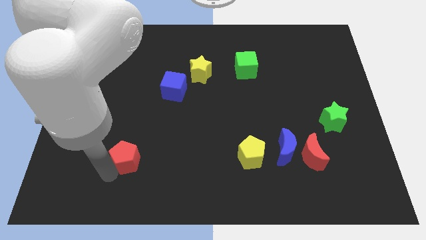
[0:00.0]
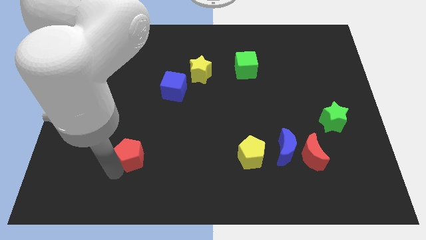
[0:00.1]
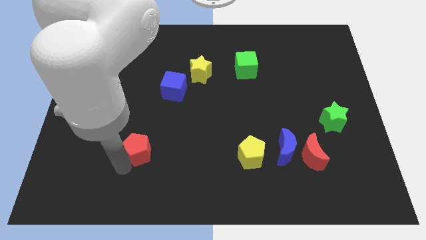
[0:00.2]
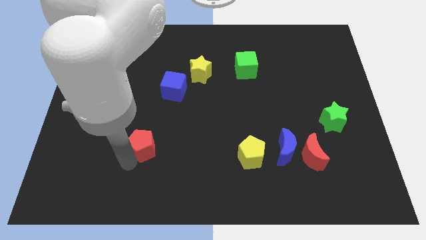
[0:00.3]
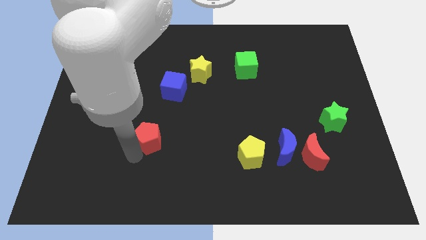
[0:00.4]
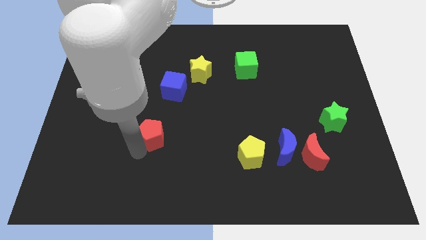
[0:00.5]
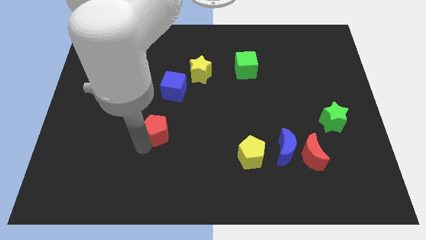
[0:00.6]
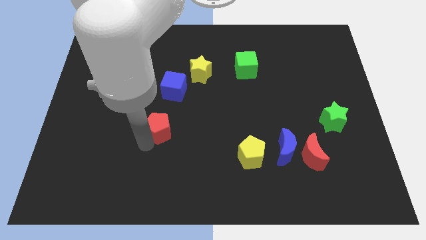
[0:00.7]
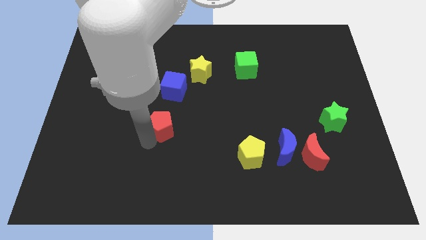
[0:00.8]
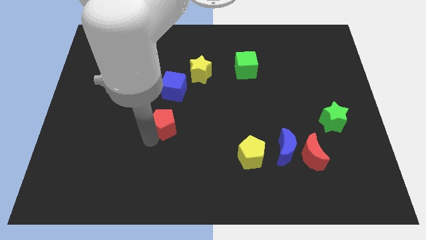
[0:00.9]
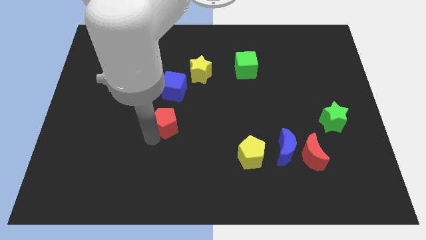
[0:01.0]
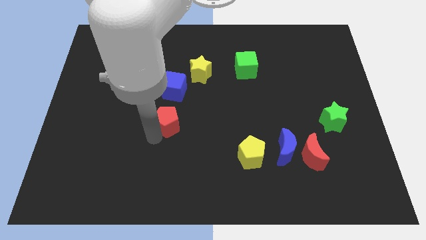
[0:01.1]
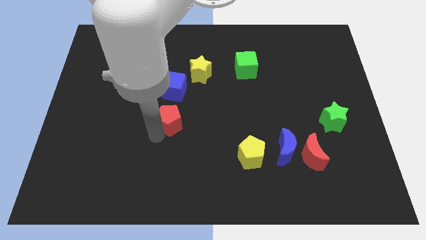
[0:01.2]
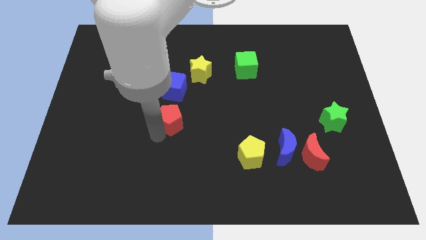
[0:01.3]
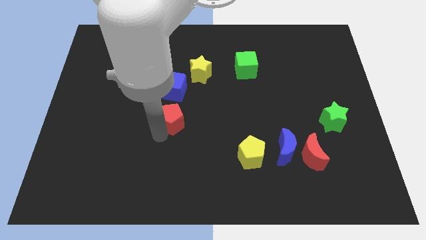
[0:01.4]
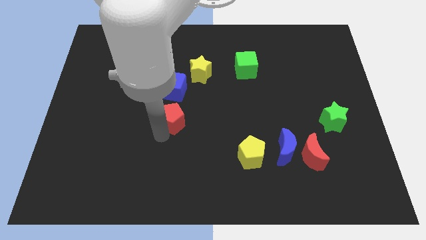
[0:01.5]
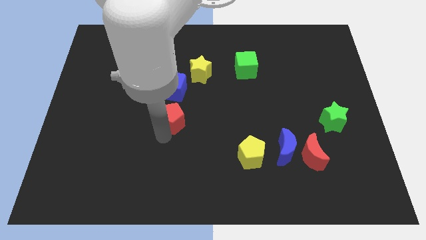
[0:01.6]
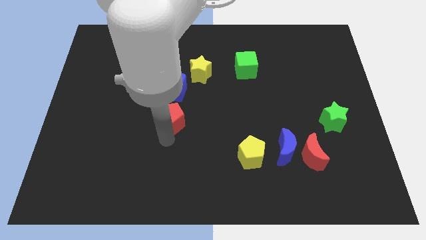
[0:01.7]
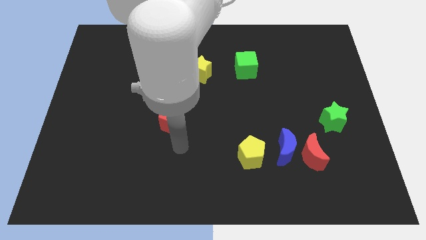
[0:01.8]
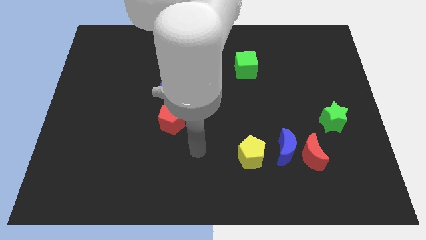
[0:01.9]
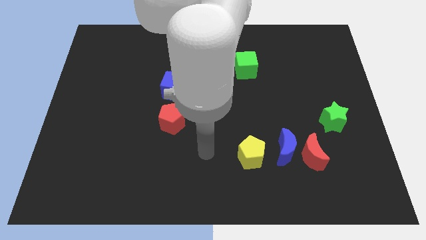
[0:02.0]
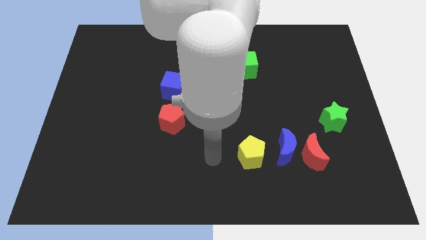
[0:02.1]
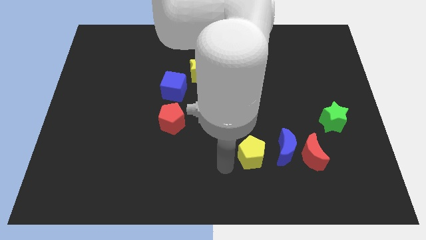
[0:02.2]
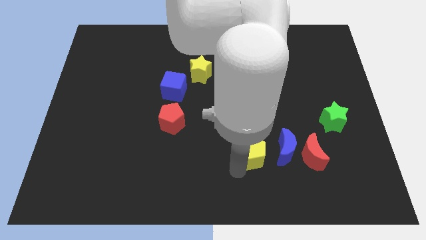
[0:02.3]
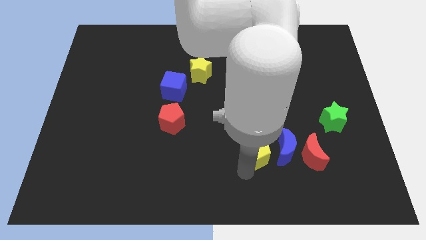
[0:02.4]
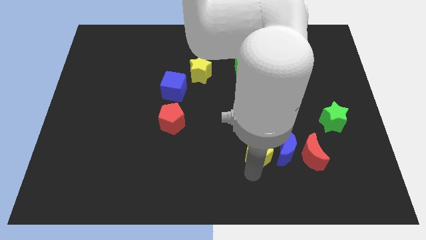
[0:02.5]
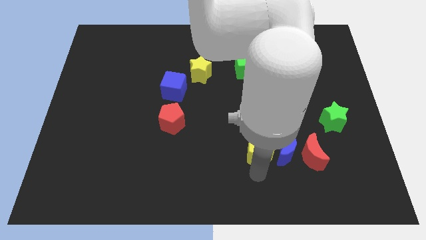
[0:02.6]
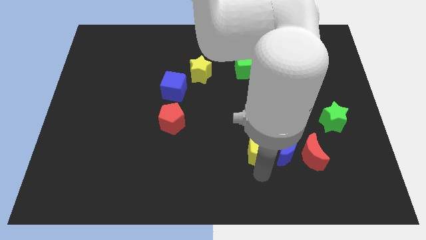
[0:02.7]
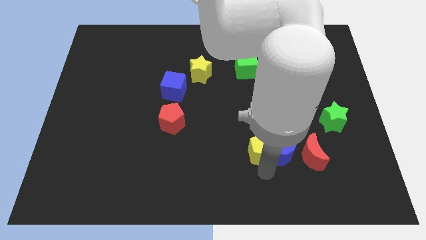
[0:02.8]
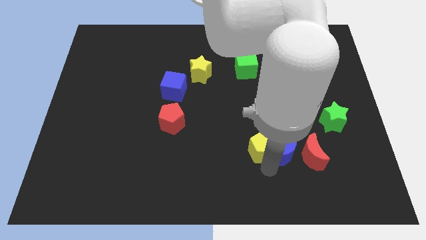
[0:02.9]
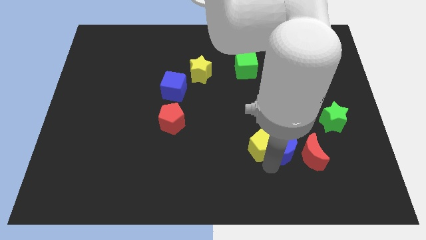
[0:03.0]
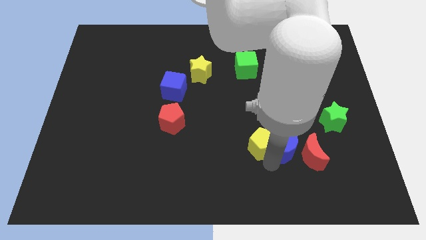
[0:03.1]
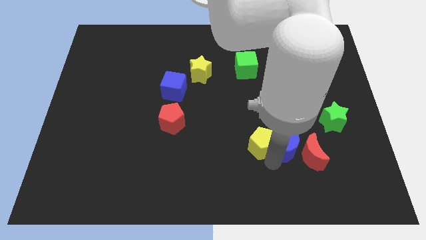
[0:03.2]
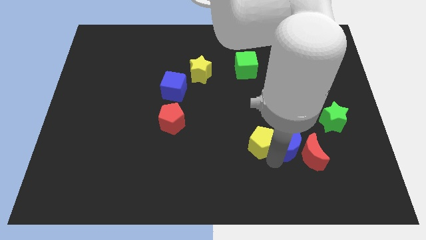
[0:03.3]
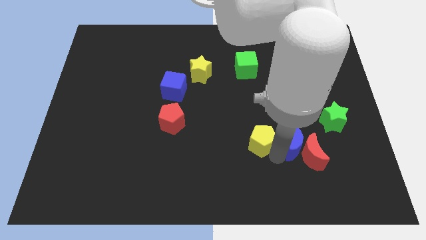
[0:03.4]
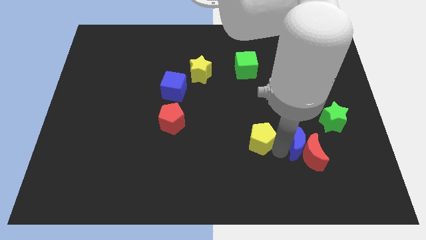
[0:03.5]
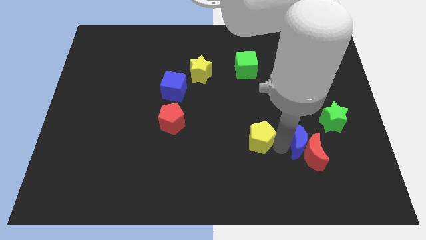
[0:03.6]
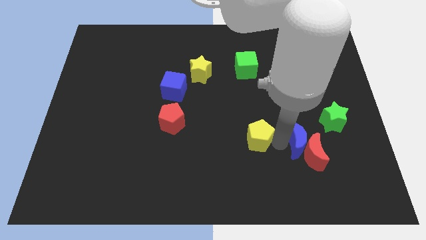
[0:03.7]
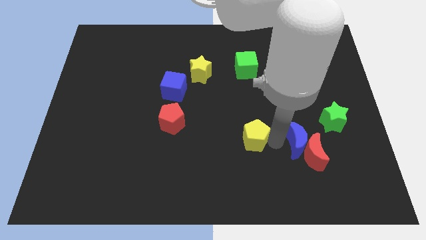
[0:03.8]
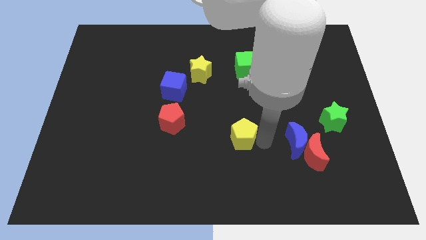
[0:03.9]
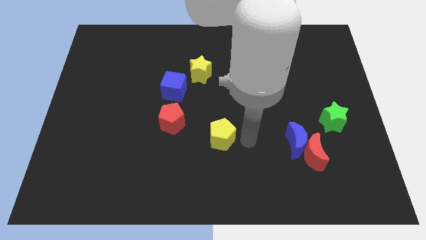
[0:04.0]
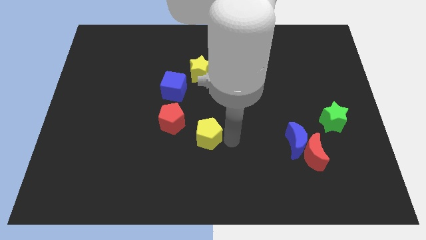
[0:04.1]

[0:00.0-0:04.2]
drag the red pentagon and place it next to the blue cube

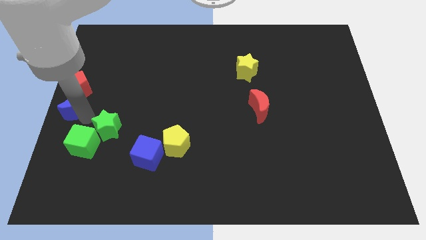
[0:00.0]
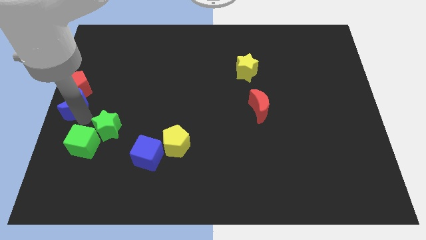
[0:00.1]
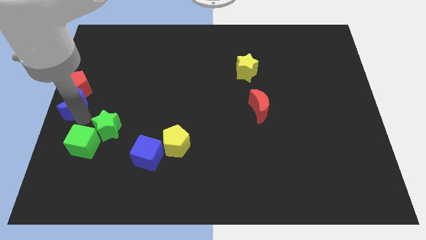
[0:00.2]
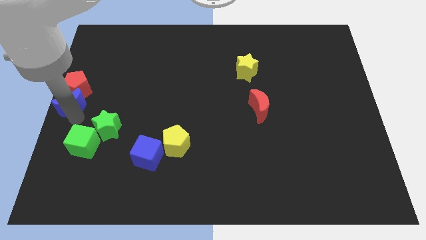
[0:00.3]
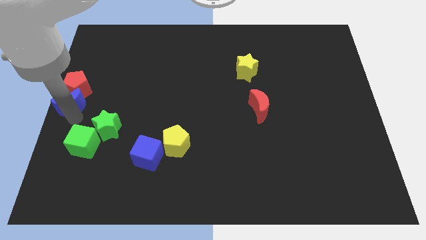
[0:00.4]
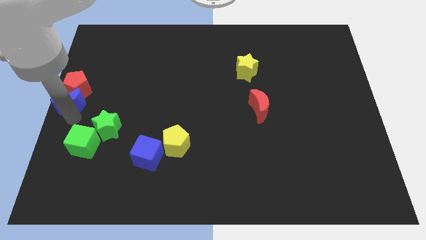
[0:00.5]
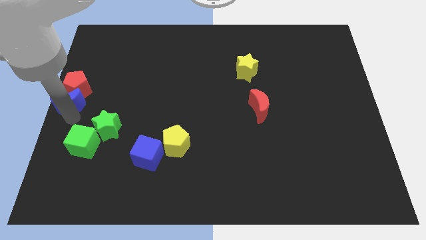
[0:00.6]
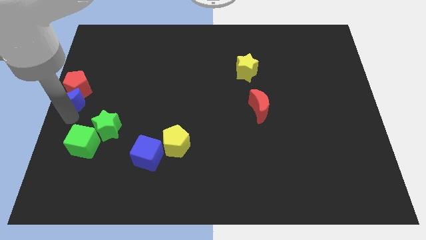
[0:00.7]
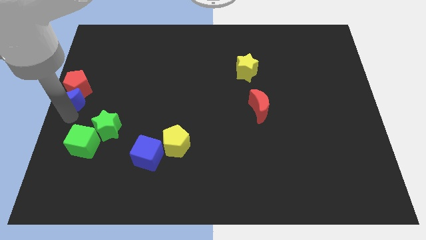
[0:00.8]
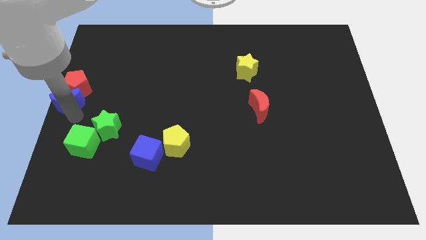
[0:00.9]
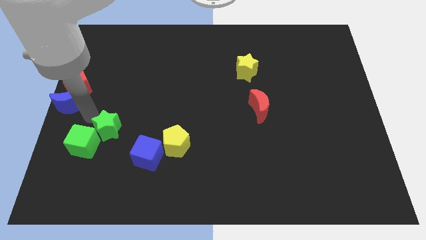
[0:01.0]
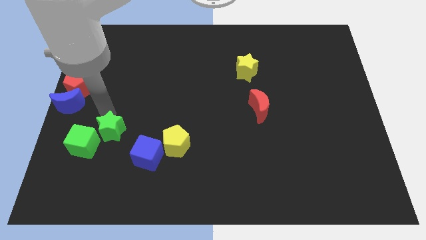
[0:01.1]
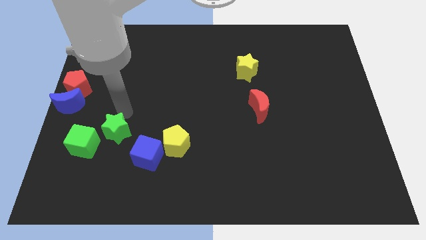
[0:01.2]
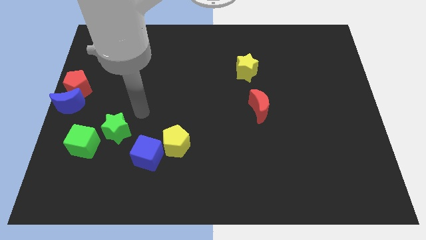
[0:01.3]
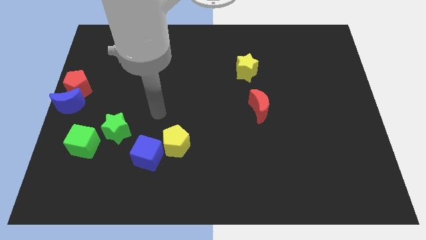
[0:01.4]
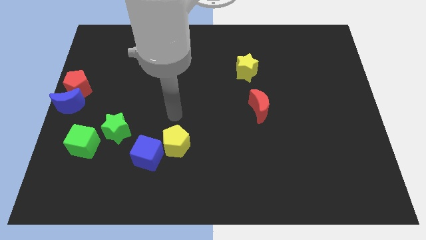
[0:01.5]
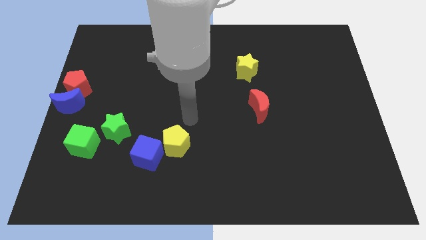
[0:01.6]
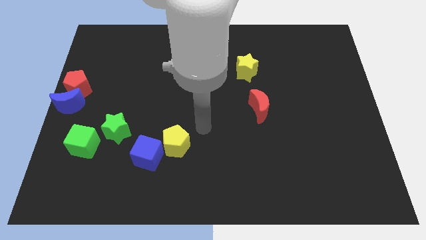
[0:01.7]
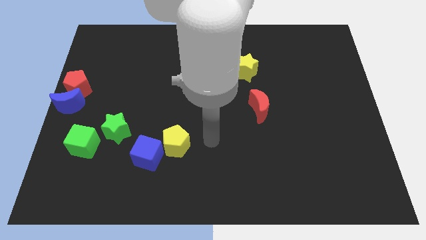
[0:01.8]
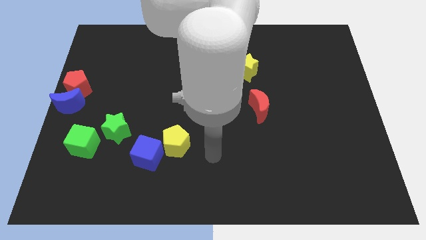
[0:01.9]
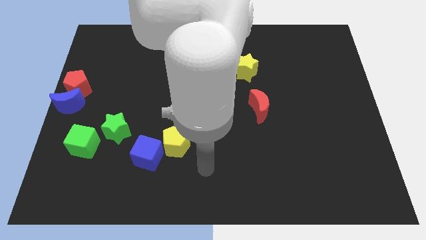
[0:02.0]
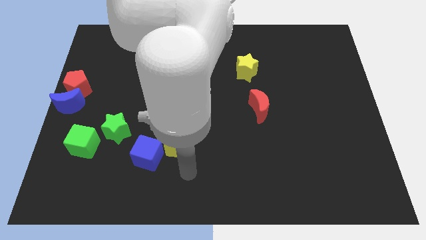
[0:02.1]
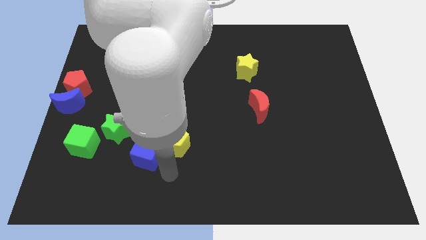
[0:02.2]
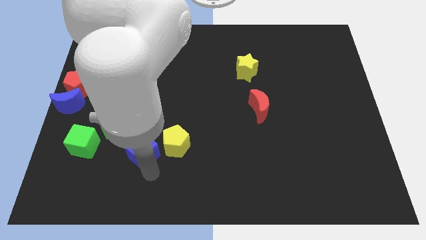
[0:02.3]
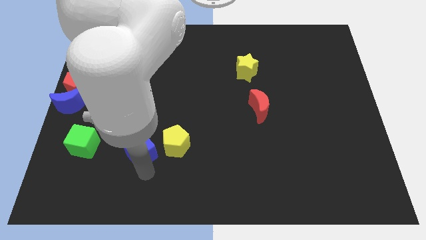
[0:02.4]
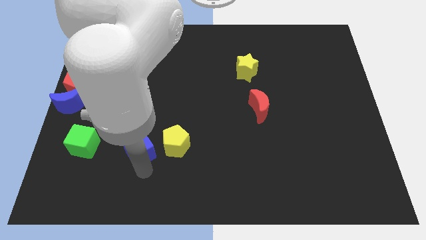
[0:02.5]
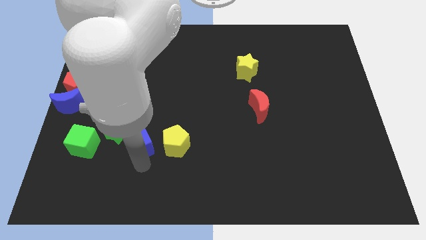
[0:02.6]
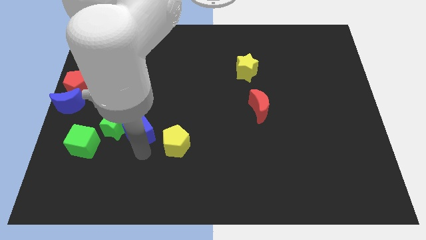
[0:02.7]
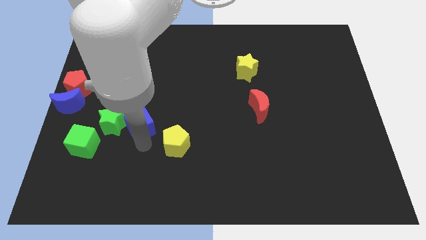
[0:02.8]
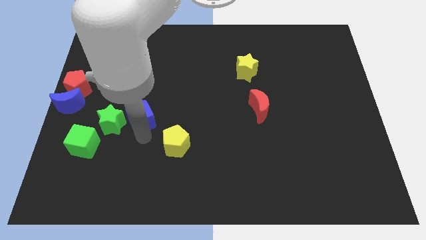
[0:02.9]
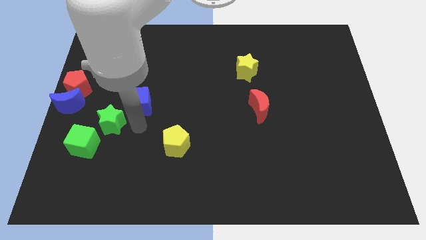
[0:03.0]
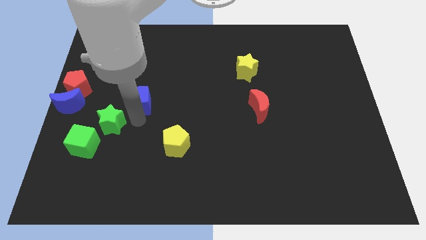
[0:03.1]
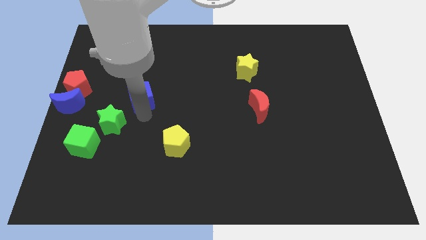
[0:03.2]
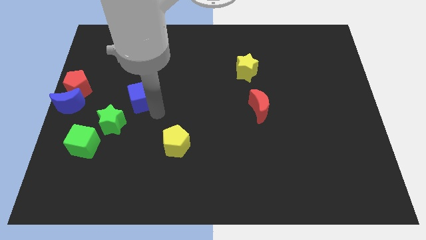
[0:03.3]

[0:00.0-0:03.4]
separate the blue cube from the yellow pentagon

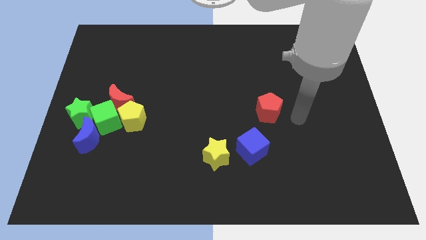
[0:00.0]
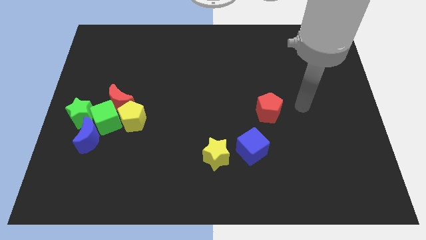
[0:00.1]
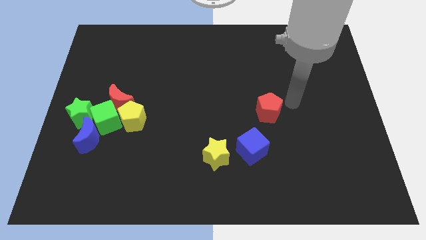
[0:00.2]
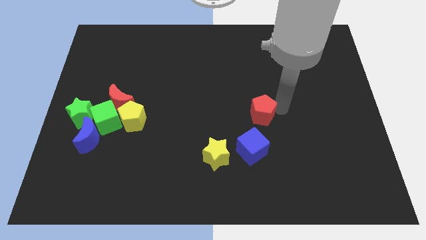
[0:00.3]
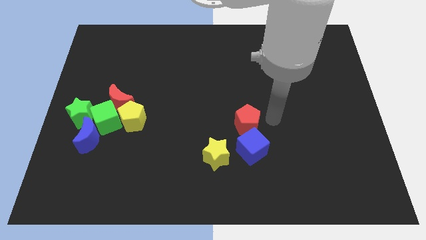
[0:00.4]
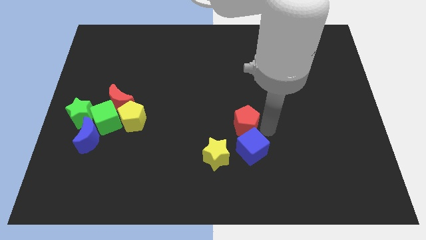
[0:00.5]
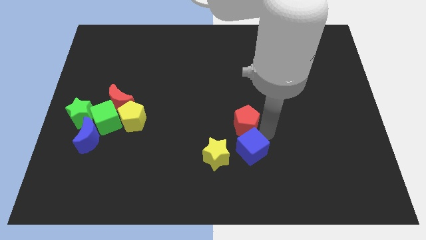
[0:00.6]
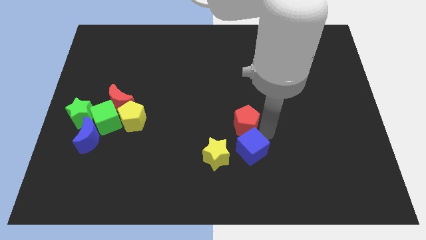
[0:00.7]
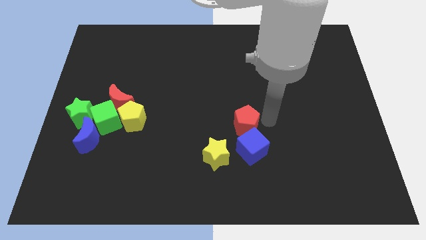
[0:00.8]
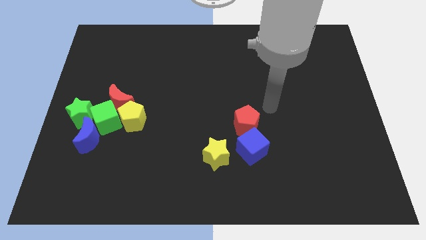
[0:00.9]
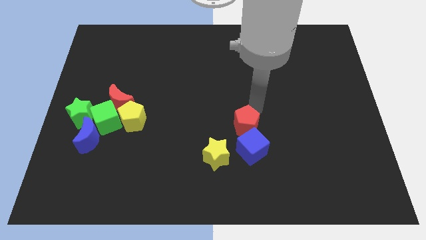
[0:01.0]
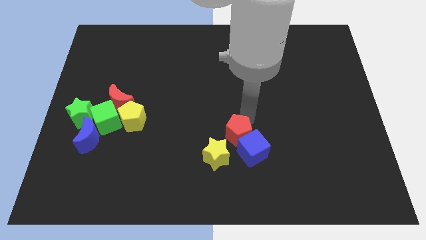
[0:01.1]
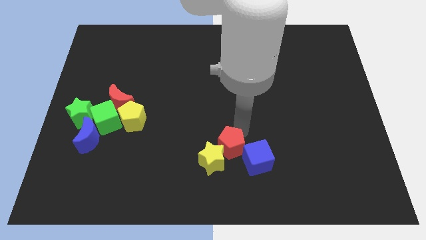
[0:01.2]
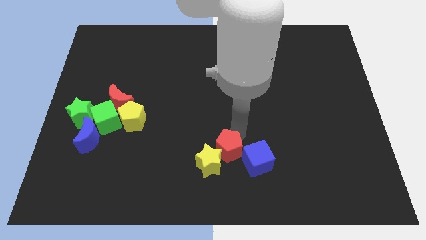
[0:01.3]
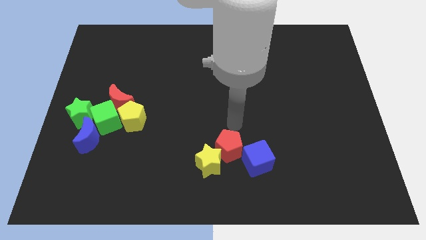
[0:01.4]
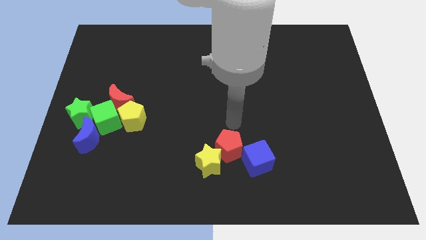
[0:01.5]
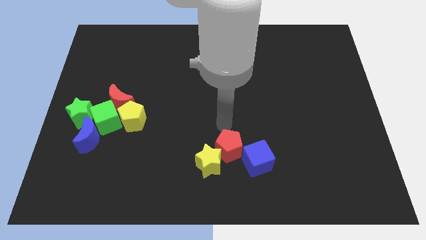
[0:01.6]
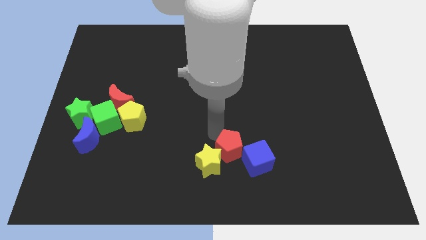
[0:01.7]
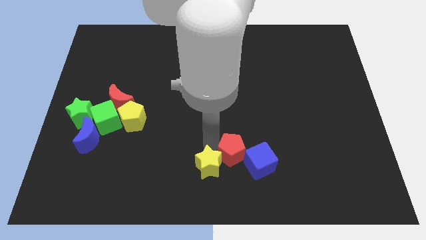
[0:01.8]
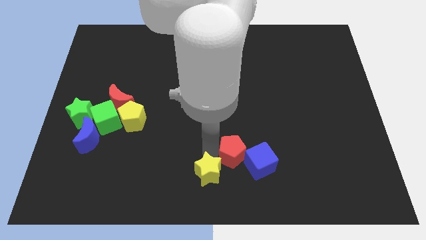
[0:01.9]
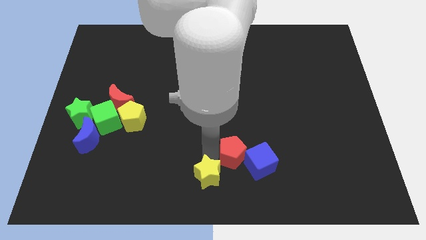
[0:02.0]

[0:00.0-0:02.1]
move the red pentagon close to the bottom center of the board
